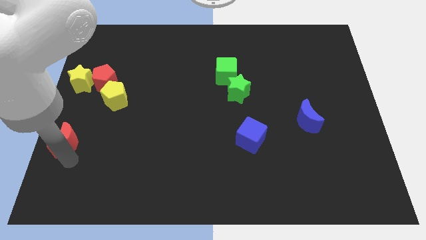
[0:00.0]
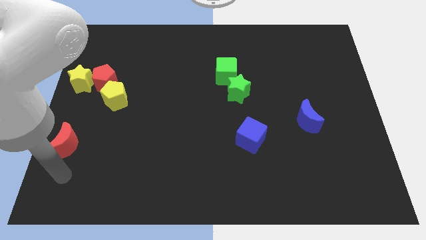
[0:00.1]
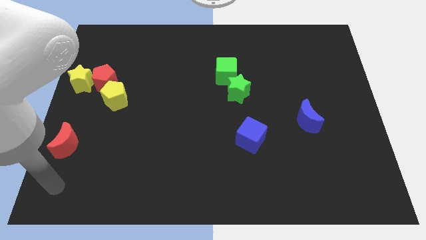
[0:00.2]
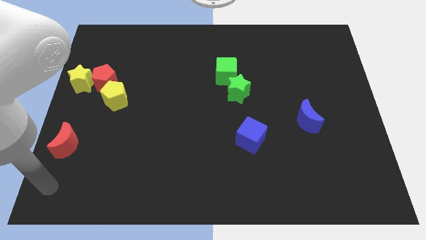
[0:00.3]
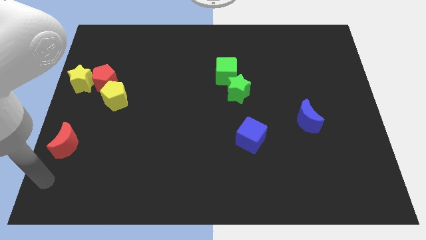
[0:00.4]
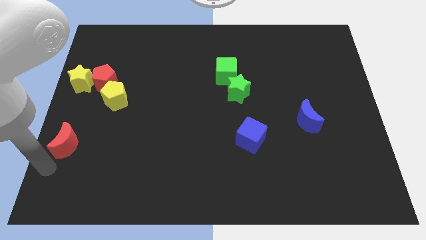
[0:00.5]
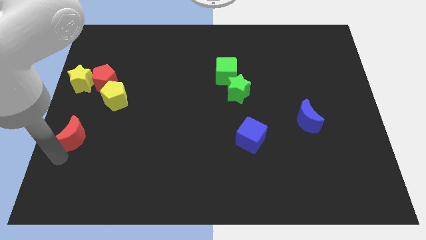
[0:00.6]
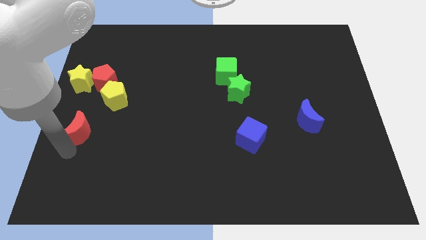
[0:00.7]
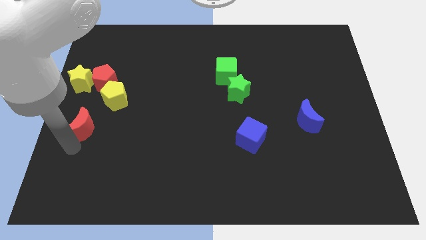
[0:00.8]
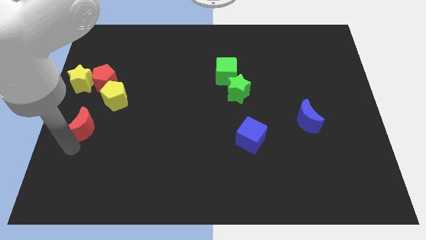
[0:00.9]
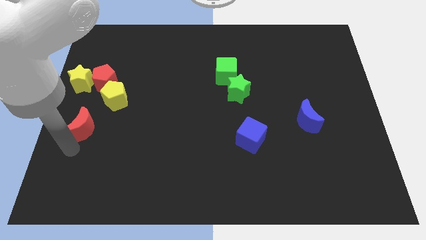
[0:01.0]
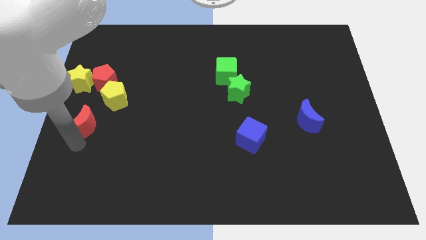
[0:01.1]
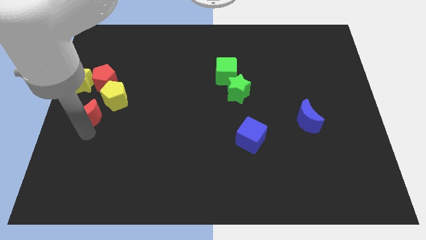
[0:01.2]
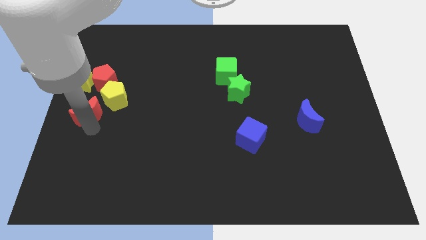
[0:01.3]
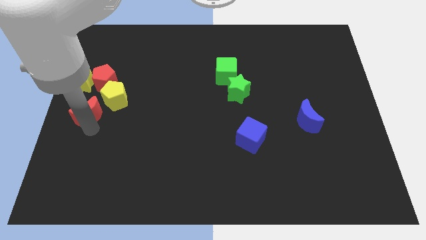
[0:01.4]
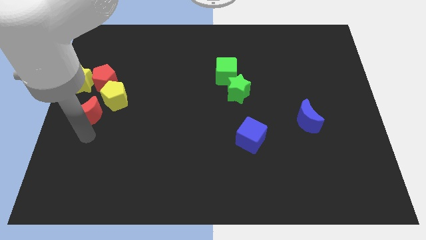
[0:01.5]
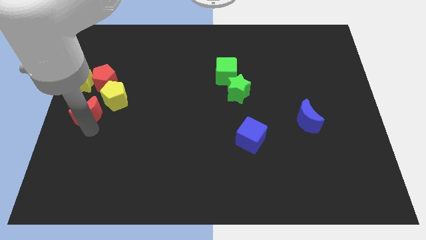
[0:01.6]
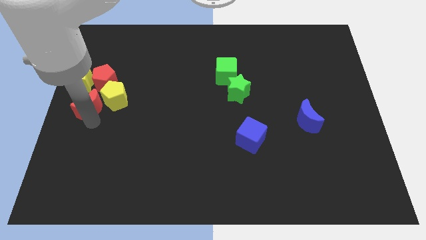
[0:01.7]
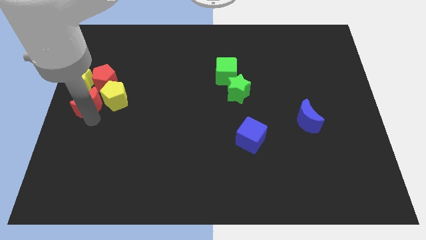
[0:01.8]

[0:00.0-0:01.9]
move the red moon into the yellow star

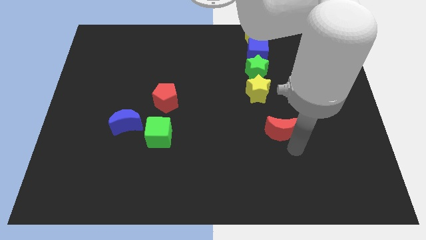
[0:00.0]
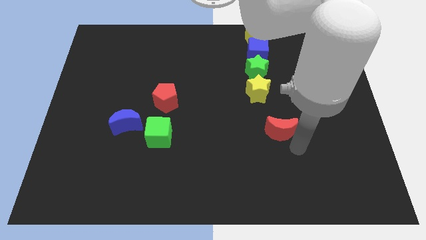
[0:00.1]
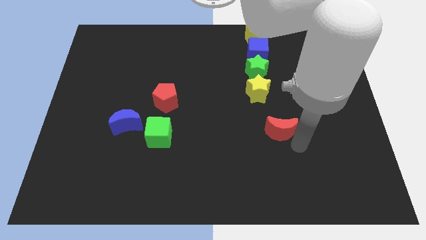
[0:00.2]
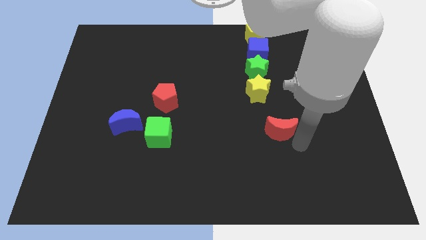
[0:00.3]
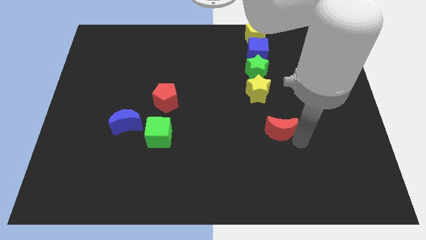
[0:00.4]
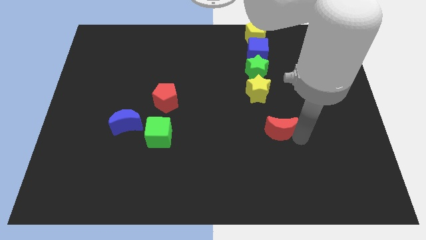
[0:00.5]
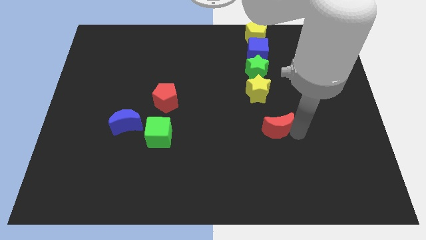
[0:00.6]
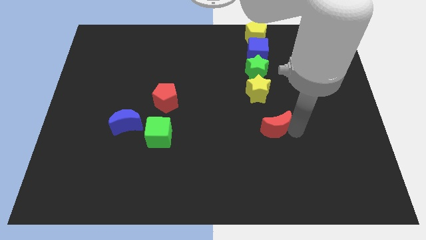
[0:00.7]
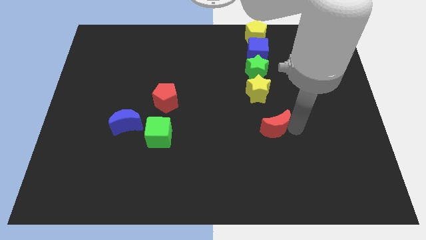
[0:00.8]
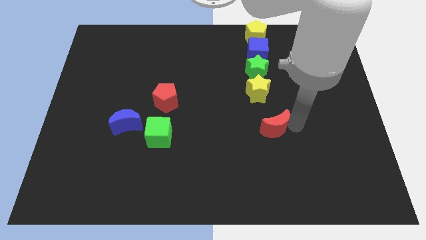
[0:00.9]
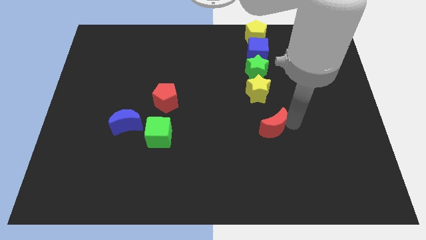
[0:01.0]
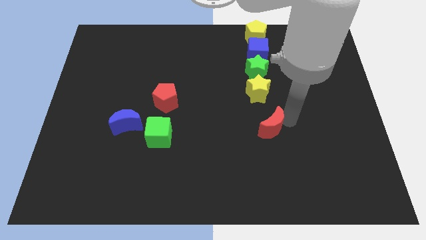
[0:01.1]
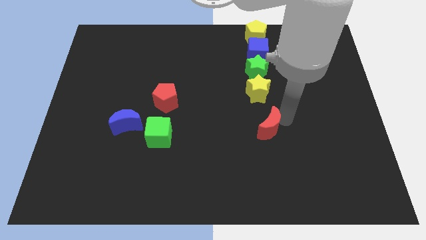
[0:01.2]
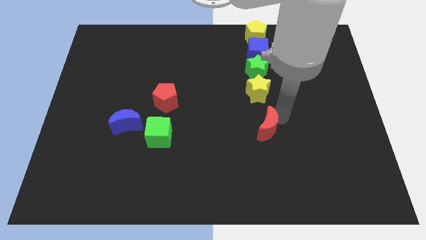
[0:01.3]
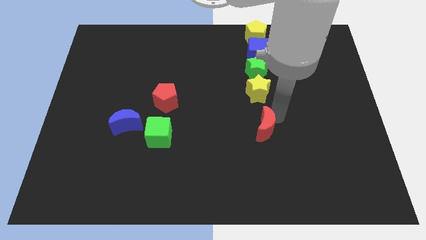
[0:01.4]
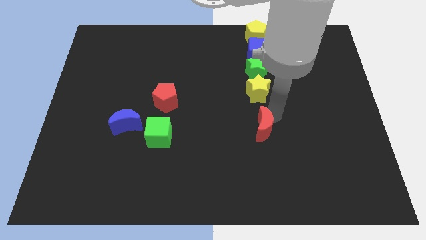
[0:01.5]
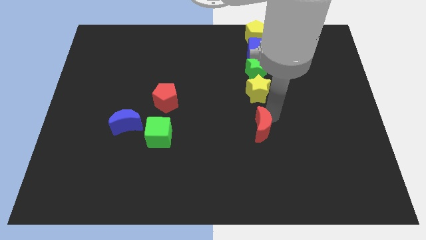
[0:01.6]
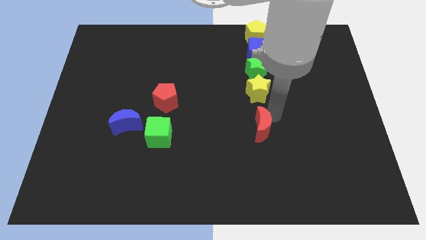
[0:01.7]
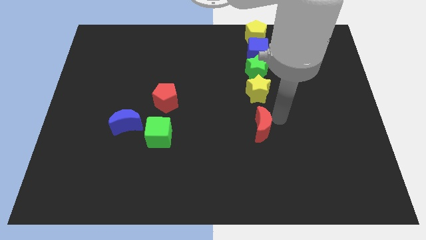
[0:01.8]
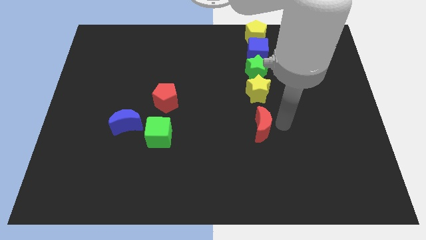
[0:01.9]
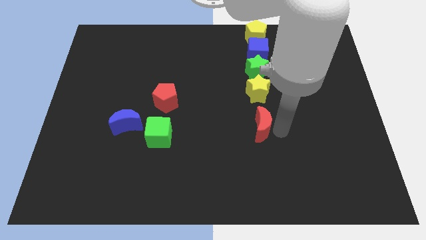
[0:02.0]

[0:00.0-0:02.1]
place red moon below the yellow star

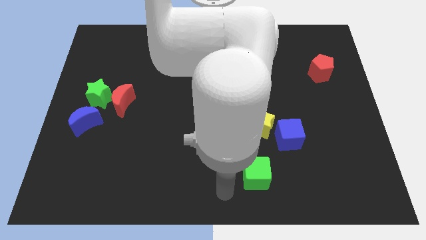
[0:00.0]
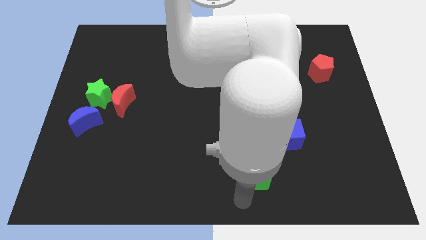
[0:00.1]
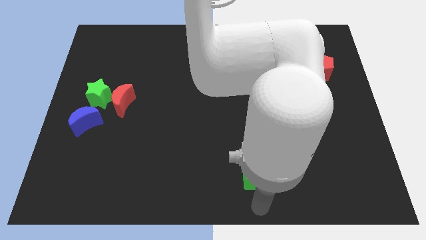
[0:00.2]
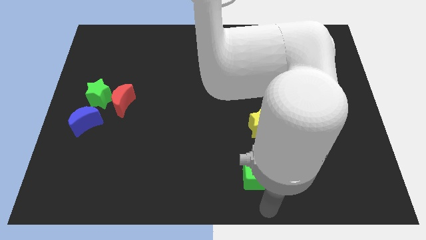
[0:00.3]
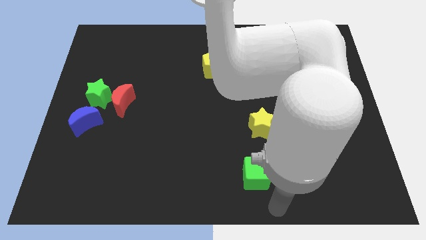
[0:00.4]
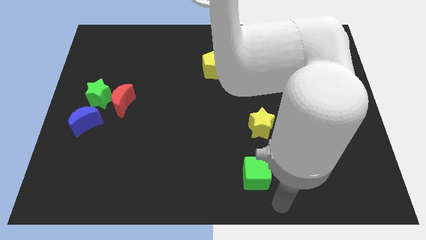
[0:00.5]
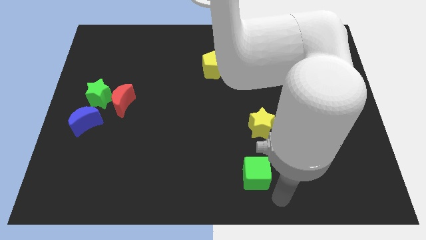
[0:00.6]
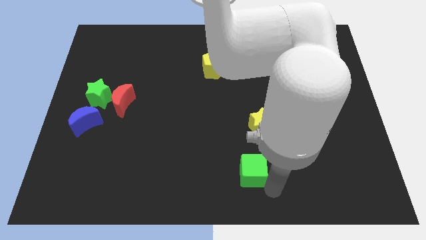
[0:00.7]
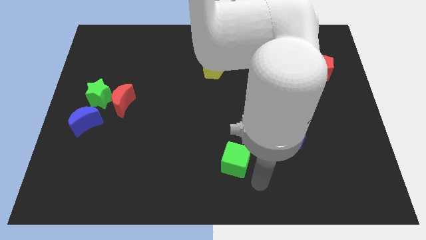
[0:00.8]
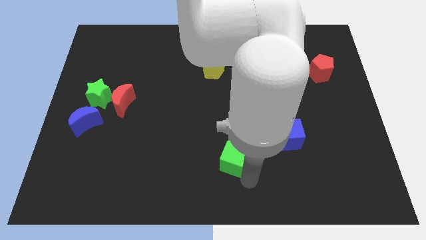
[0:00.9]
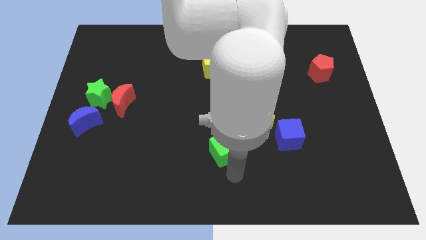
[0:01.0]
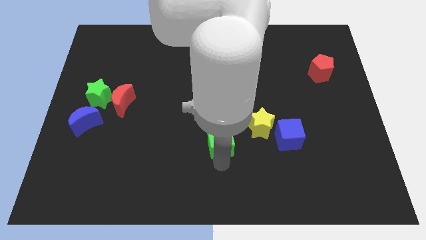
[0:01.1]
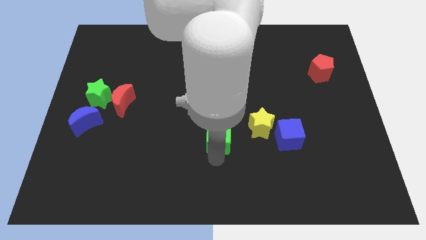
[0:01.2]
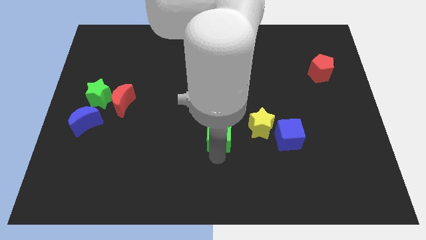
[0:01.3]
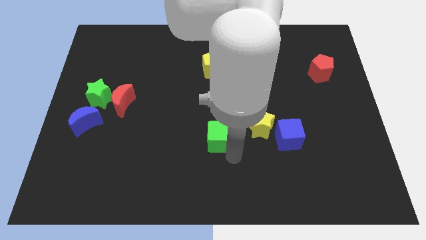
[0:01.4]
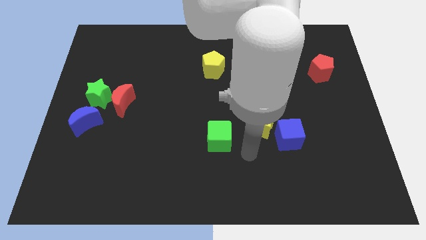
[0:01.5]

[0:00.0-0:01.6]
put the green cube at the left side of the blue cube

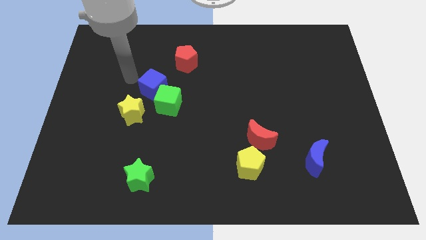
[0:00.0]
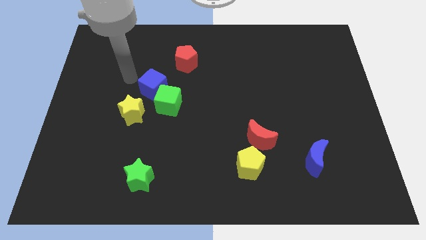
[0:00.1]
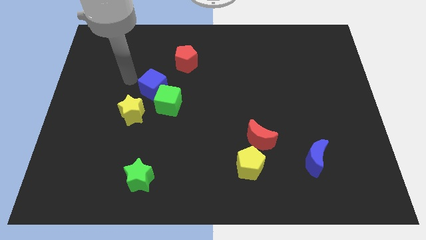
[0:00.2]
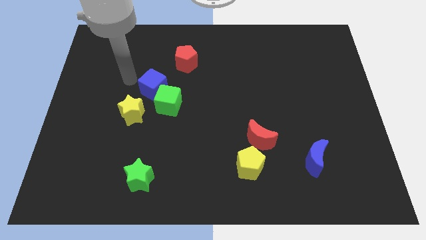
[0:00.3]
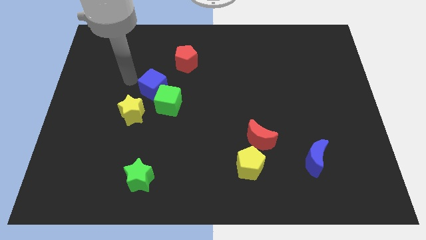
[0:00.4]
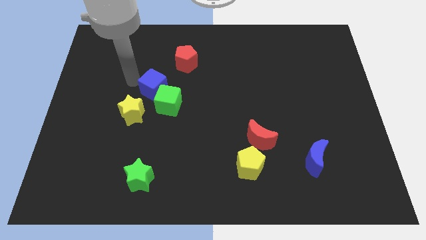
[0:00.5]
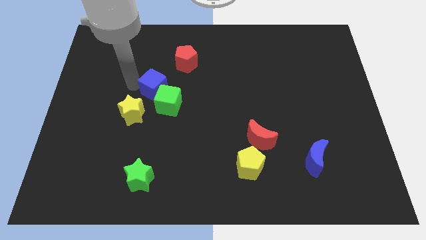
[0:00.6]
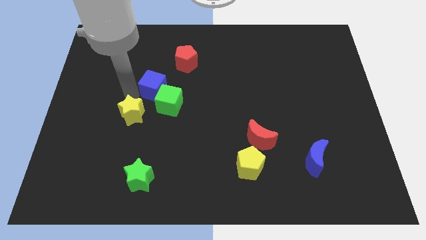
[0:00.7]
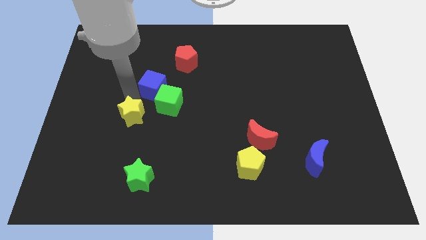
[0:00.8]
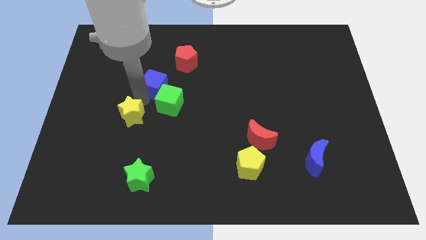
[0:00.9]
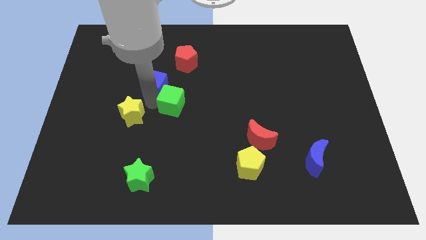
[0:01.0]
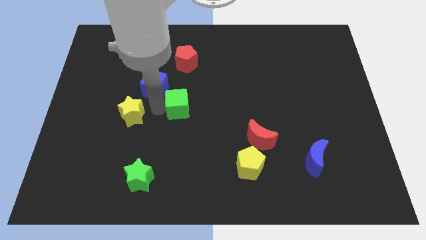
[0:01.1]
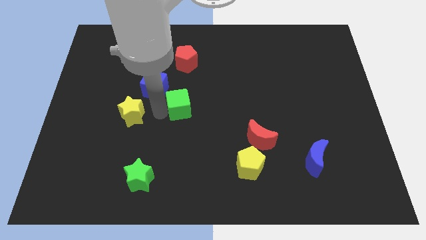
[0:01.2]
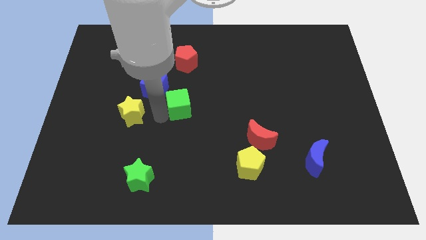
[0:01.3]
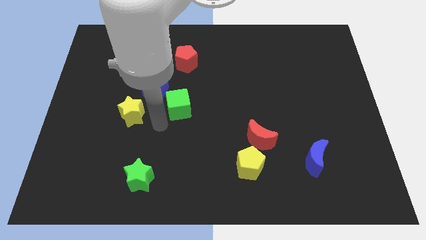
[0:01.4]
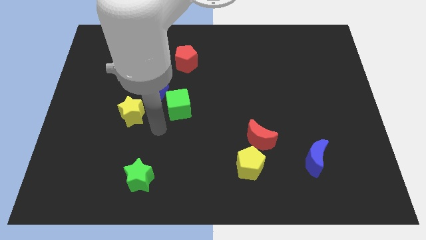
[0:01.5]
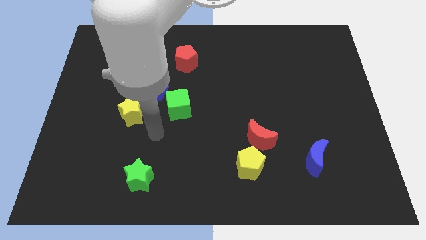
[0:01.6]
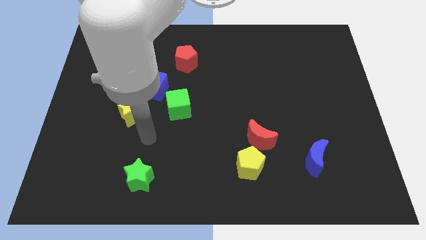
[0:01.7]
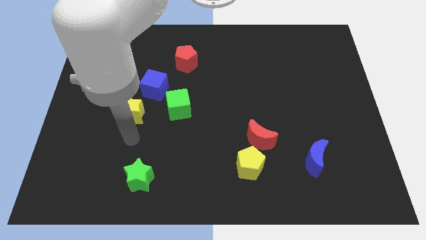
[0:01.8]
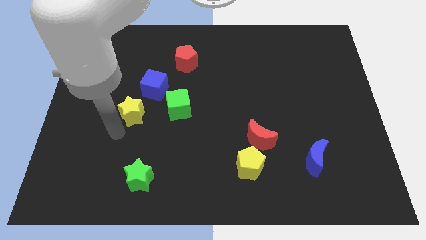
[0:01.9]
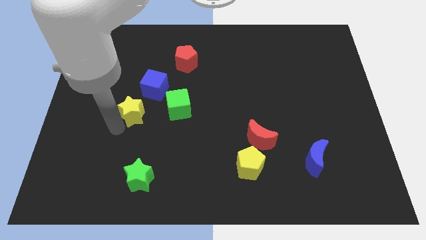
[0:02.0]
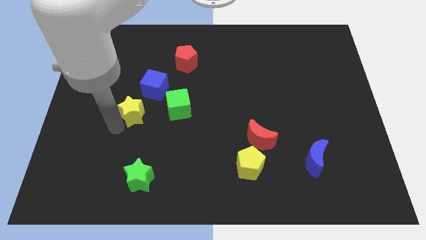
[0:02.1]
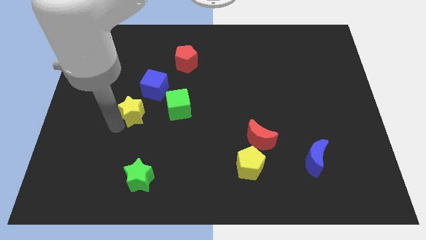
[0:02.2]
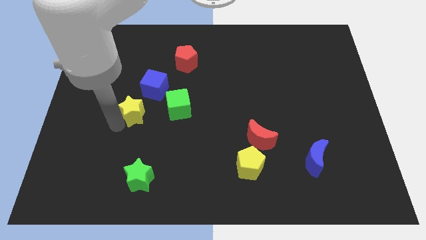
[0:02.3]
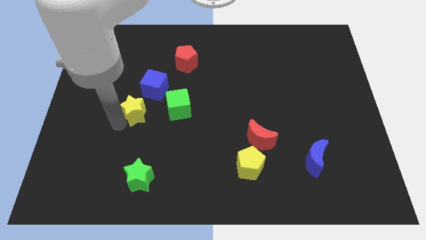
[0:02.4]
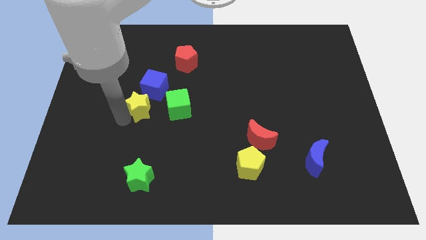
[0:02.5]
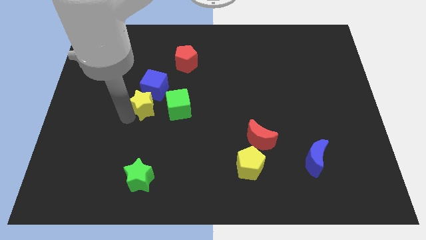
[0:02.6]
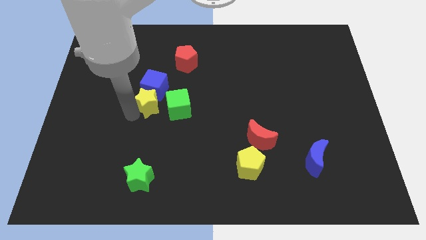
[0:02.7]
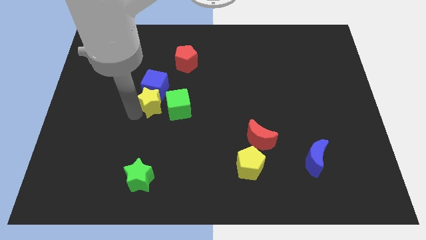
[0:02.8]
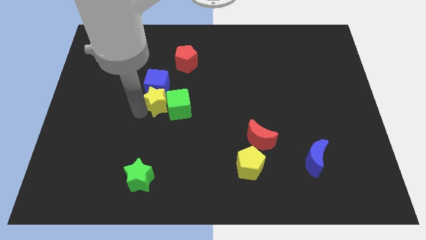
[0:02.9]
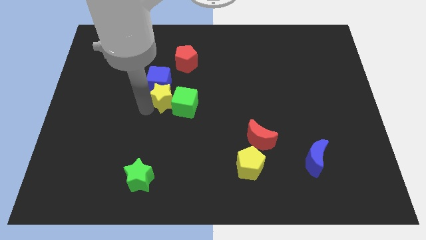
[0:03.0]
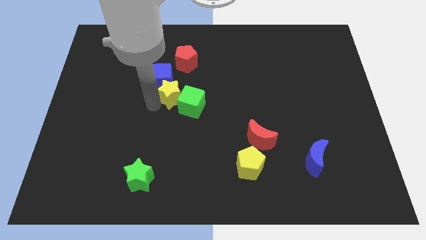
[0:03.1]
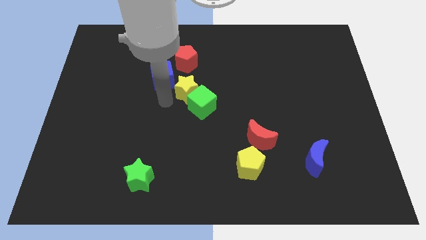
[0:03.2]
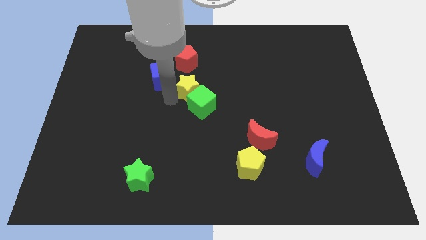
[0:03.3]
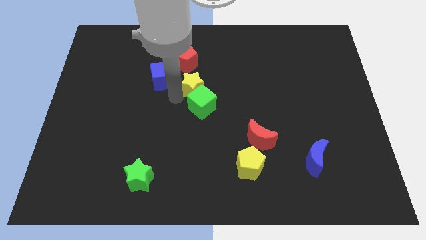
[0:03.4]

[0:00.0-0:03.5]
place the yellow star down to the red pentagon
